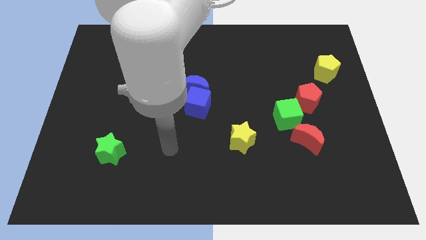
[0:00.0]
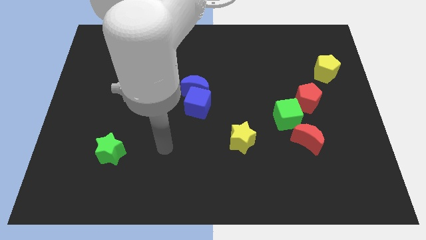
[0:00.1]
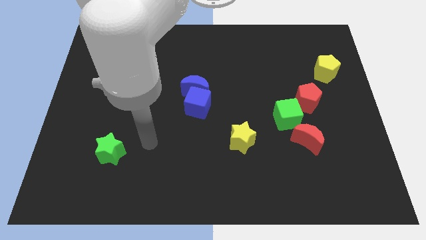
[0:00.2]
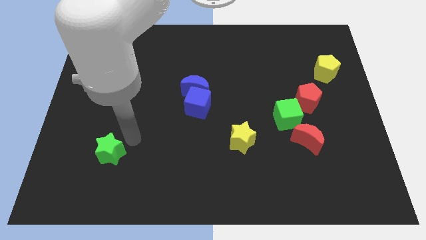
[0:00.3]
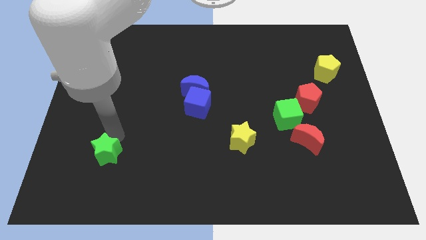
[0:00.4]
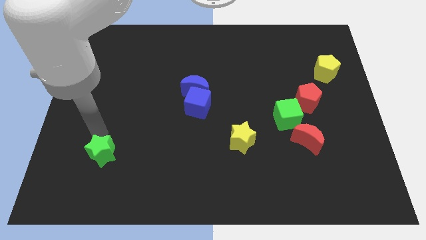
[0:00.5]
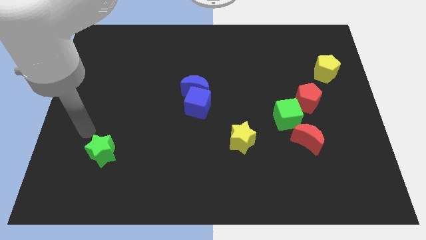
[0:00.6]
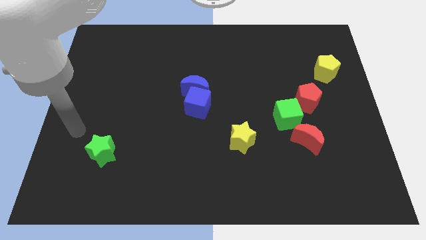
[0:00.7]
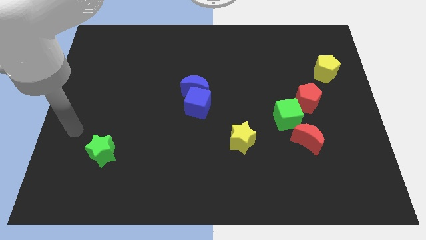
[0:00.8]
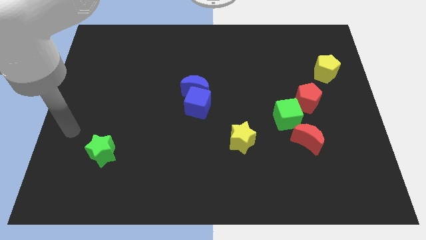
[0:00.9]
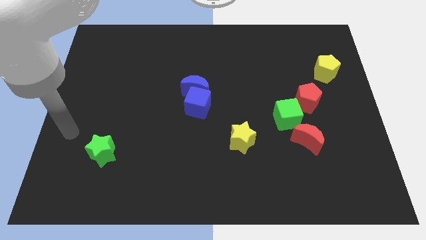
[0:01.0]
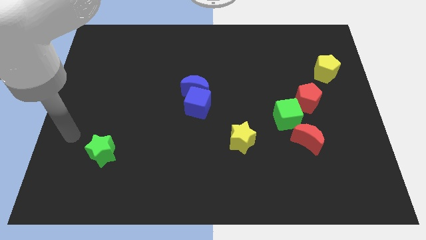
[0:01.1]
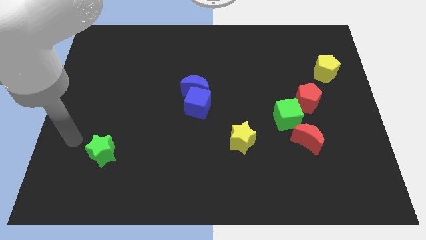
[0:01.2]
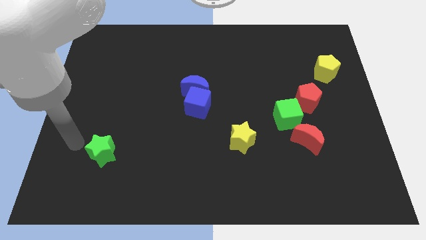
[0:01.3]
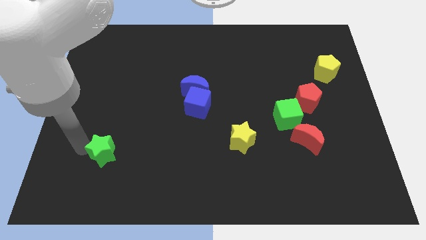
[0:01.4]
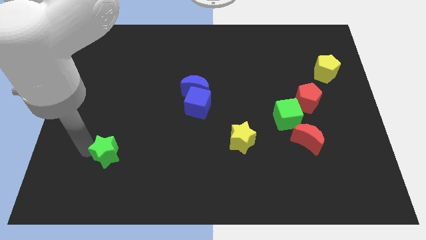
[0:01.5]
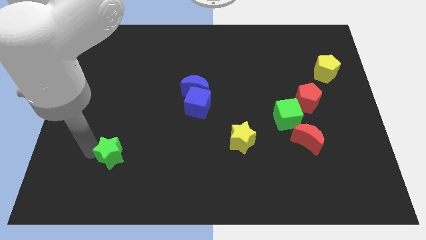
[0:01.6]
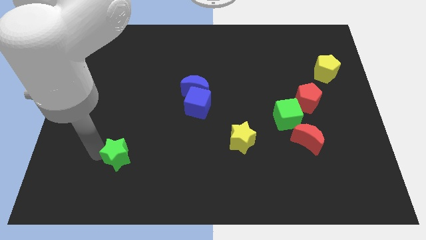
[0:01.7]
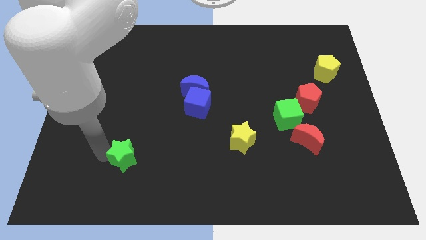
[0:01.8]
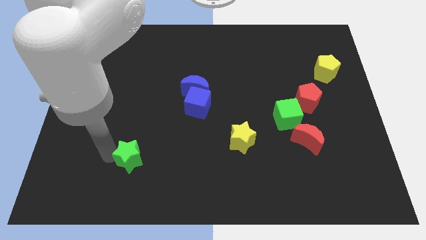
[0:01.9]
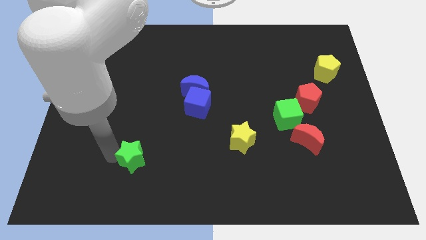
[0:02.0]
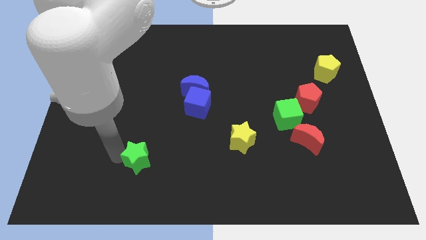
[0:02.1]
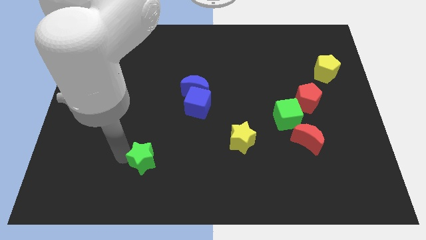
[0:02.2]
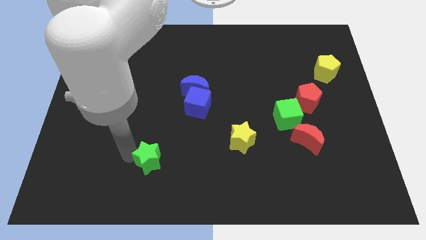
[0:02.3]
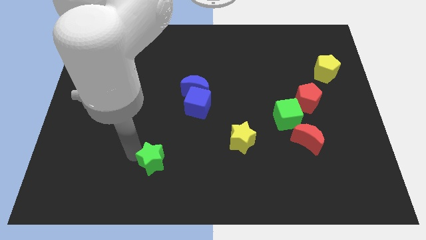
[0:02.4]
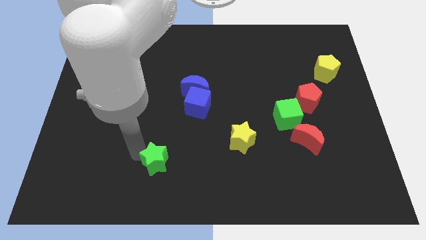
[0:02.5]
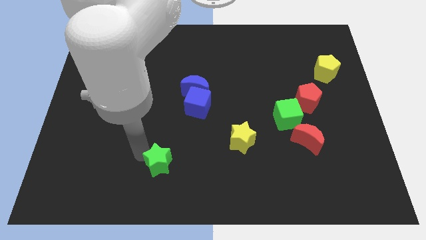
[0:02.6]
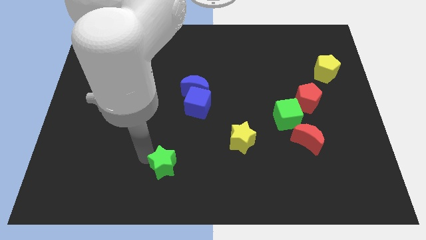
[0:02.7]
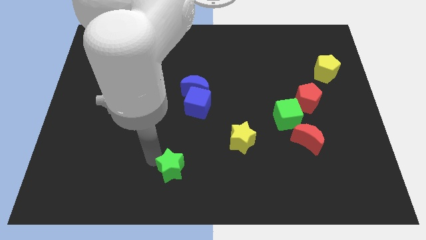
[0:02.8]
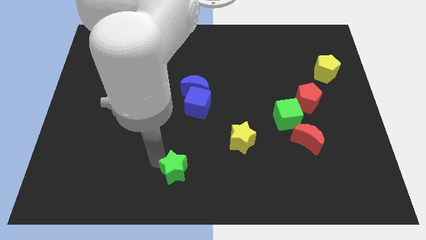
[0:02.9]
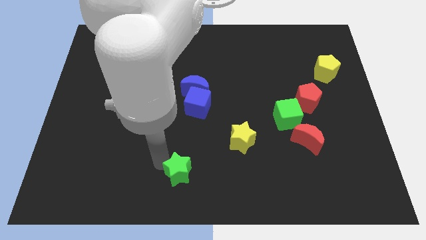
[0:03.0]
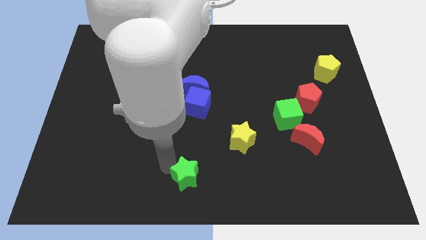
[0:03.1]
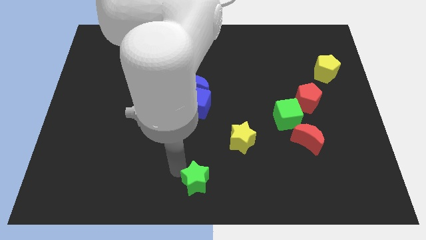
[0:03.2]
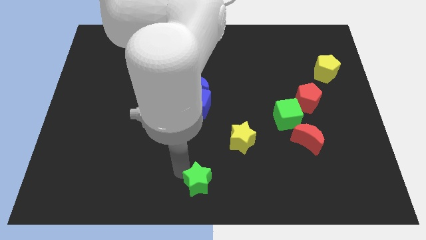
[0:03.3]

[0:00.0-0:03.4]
drag green star towards bottom middle of the board

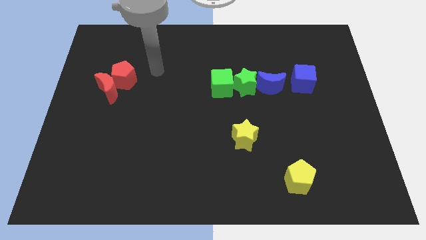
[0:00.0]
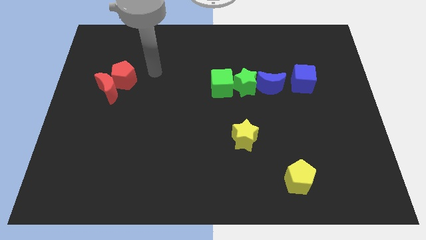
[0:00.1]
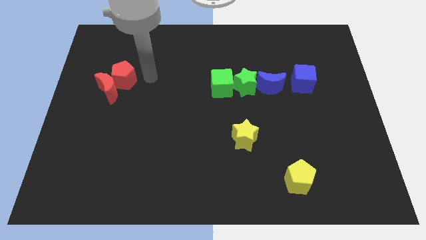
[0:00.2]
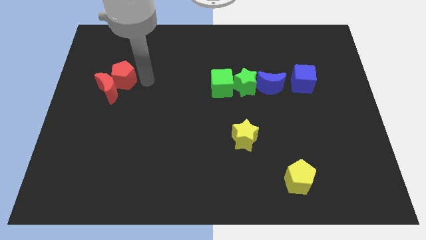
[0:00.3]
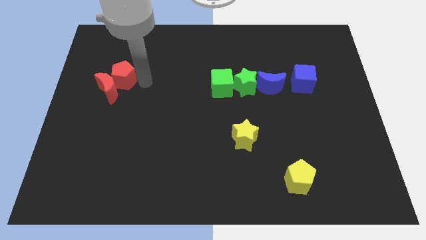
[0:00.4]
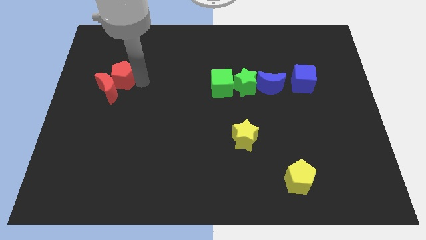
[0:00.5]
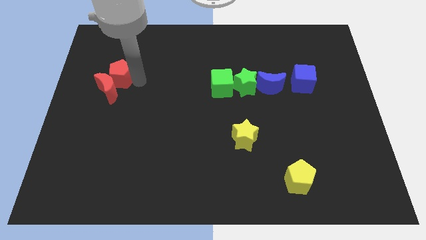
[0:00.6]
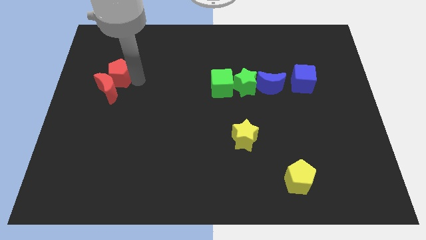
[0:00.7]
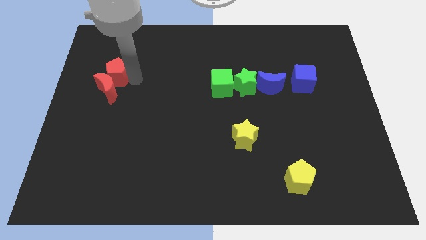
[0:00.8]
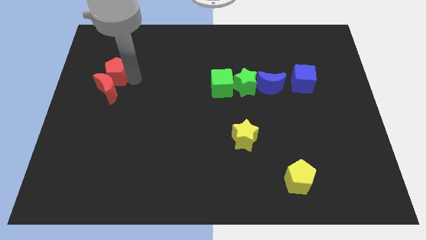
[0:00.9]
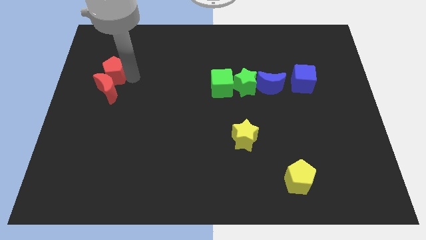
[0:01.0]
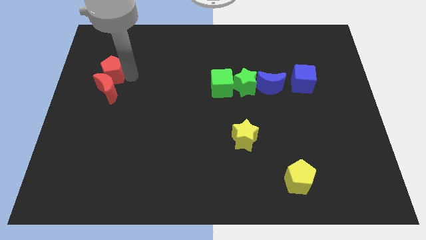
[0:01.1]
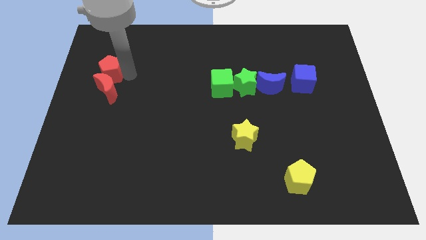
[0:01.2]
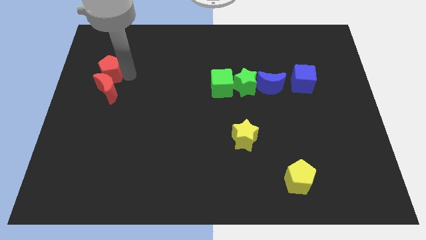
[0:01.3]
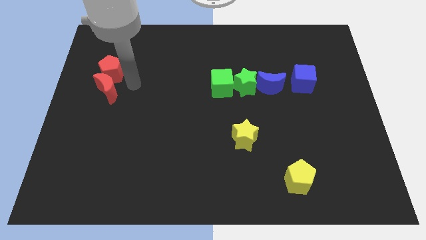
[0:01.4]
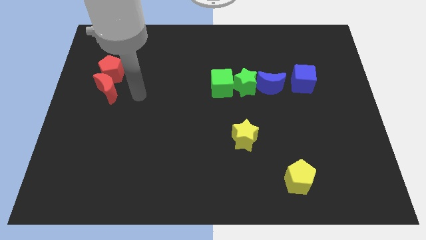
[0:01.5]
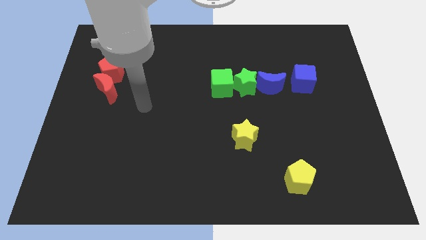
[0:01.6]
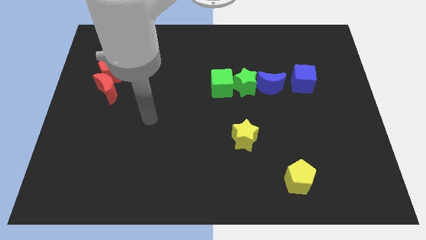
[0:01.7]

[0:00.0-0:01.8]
move the red pentagon to the top side of the red crescent

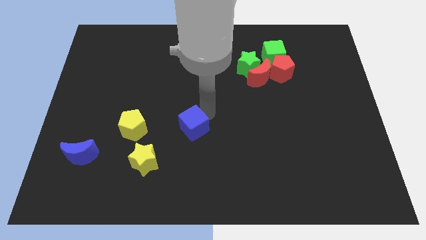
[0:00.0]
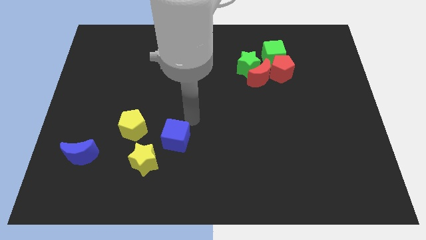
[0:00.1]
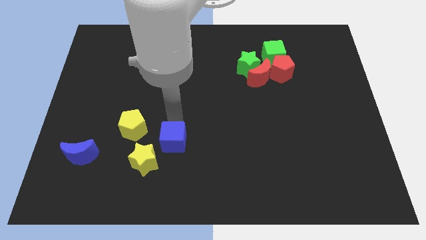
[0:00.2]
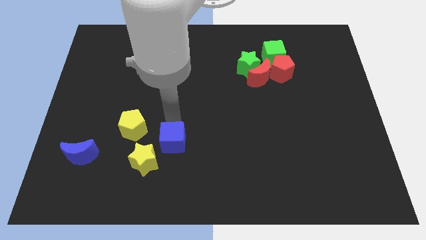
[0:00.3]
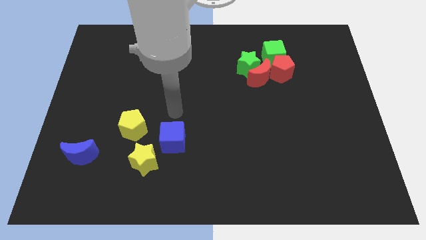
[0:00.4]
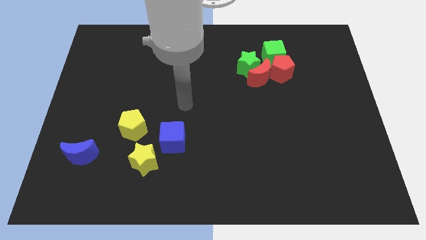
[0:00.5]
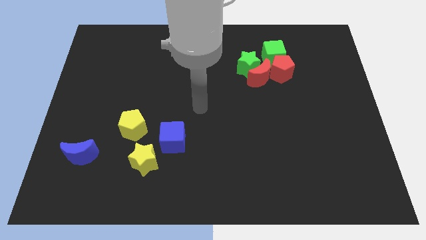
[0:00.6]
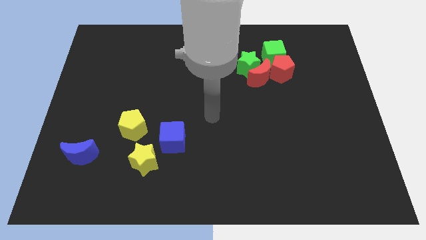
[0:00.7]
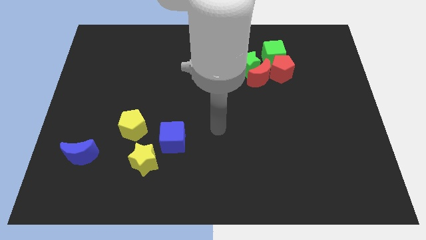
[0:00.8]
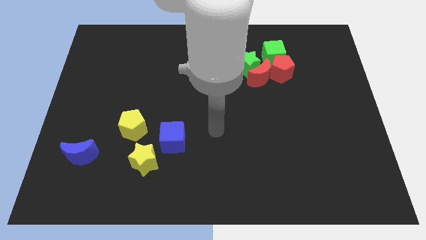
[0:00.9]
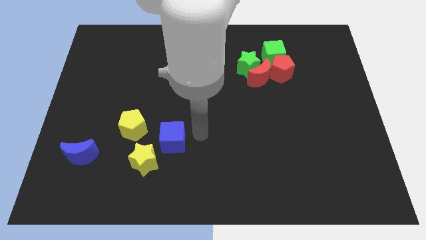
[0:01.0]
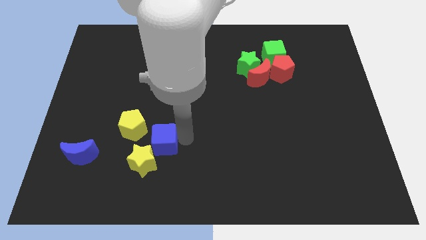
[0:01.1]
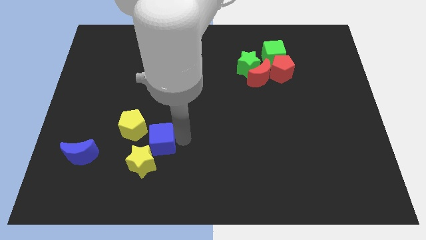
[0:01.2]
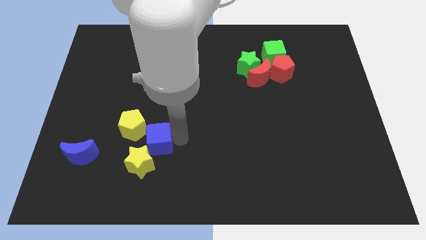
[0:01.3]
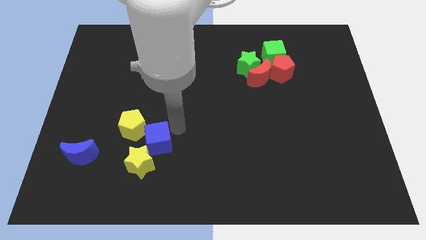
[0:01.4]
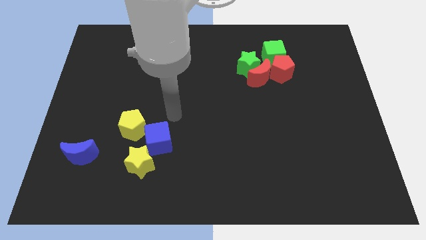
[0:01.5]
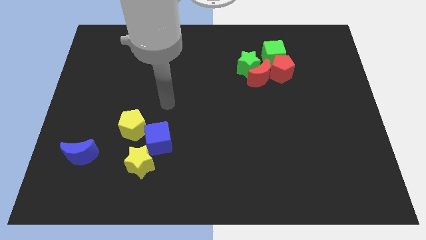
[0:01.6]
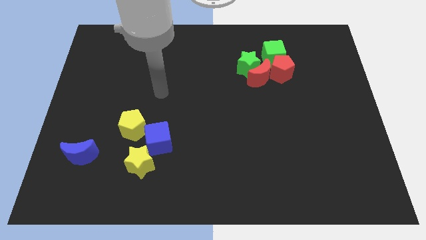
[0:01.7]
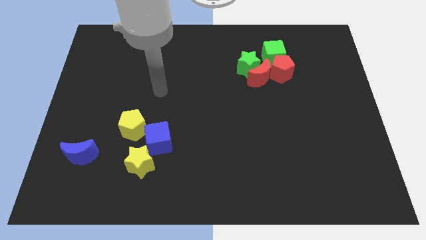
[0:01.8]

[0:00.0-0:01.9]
place the blue cube near the yellow pentagon

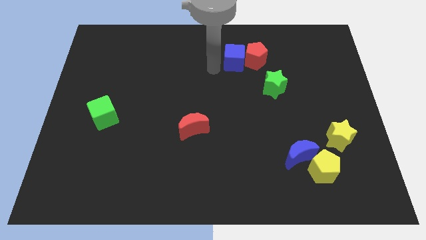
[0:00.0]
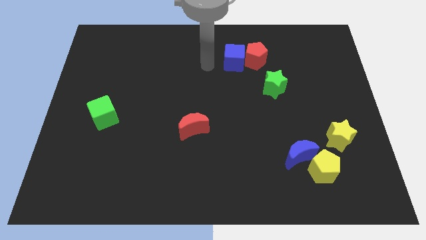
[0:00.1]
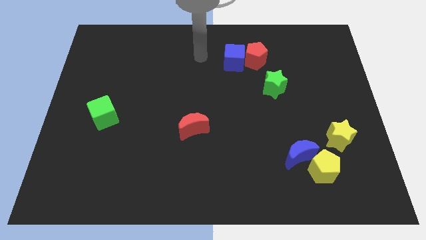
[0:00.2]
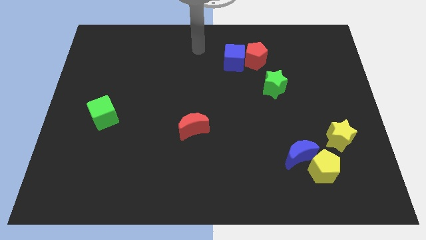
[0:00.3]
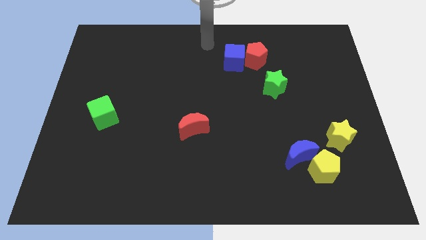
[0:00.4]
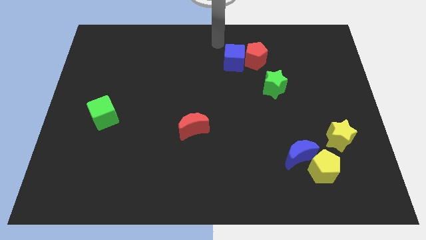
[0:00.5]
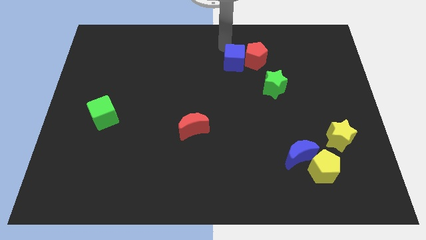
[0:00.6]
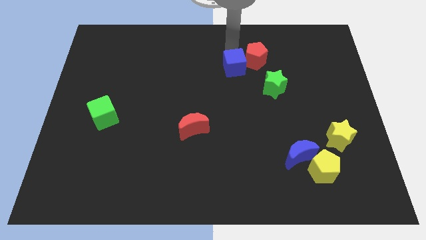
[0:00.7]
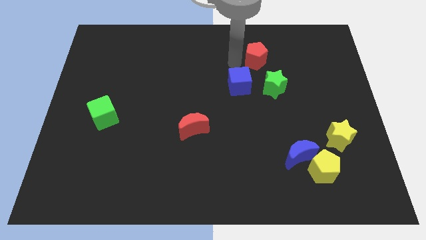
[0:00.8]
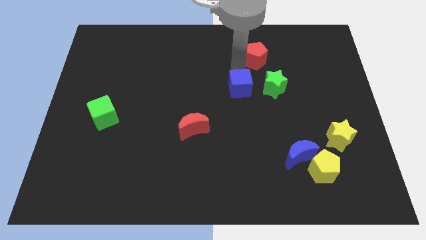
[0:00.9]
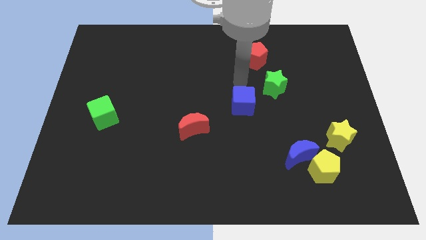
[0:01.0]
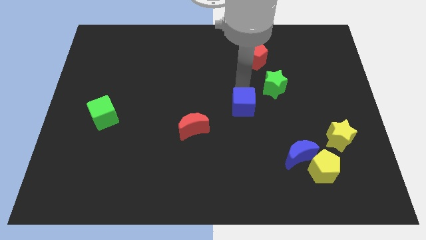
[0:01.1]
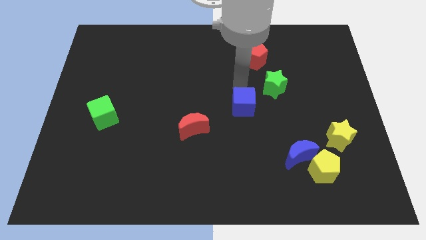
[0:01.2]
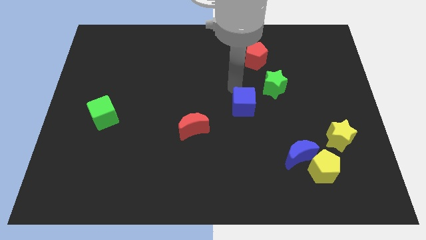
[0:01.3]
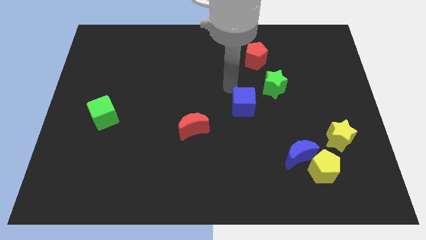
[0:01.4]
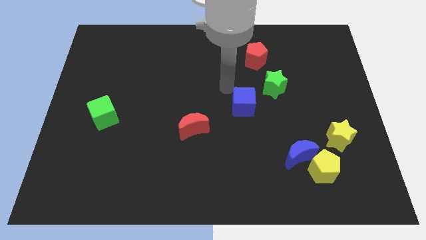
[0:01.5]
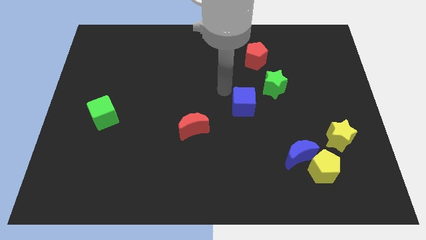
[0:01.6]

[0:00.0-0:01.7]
place the blue cube in between the green star and red moon
